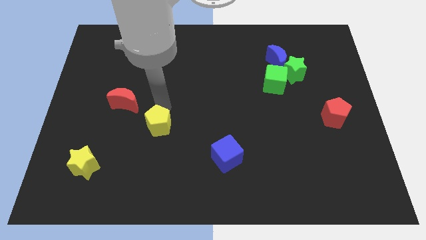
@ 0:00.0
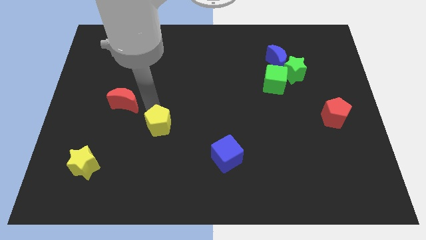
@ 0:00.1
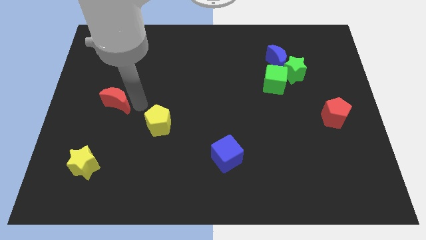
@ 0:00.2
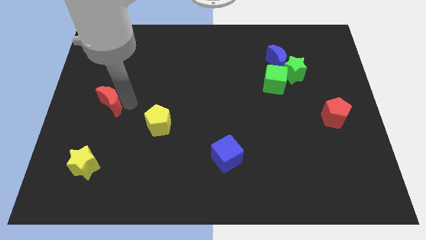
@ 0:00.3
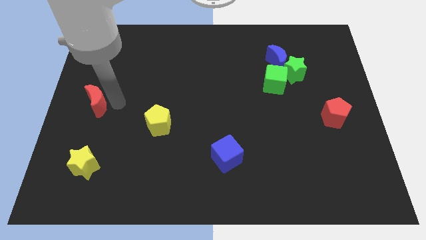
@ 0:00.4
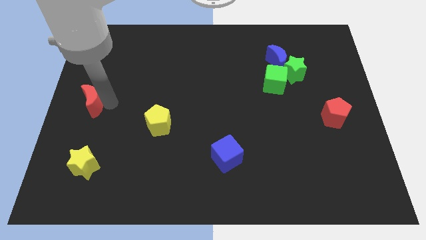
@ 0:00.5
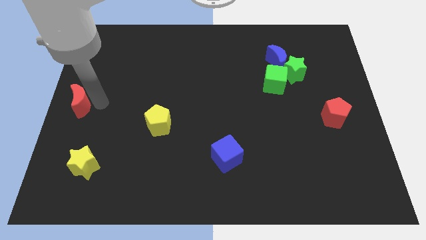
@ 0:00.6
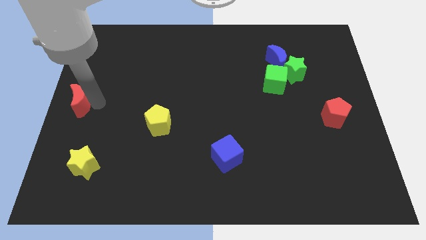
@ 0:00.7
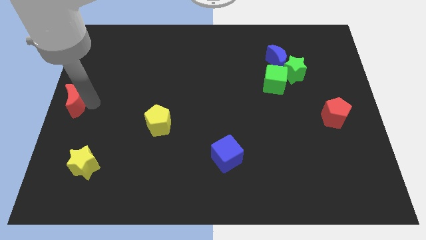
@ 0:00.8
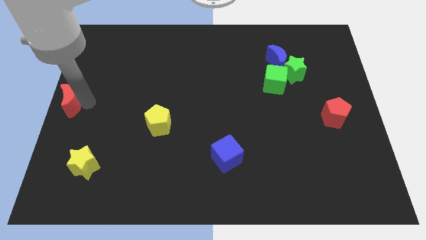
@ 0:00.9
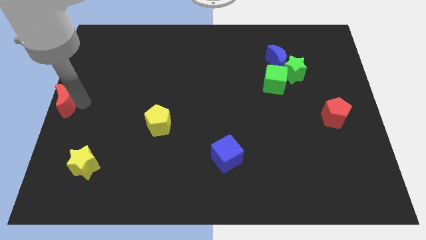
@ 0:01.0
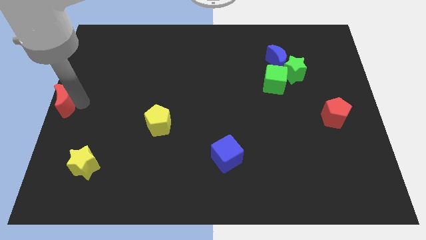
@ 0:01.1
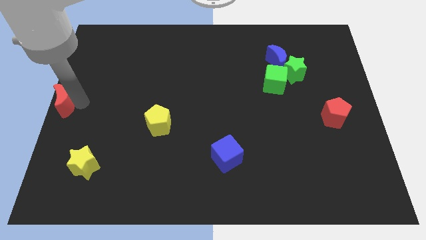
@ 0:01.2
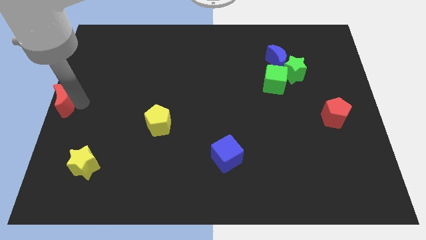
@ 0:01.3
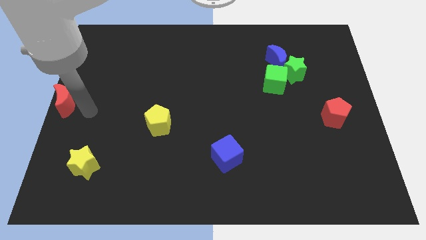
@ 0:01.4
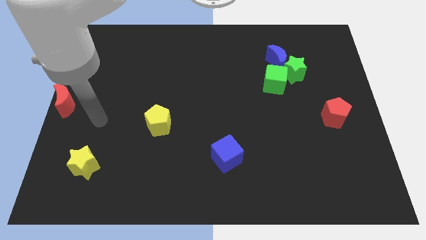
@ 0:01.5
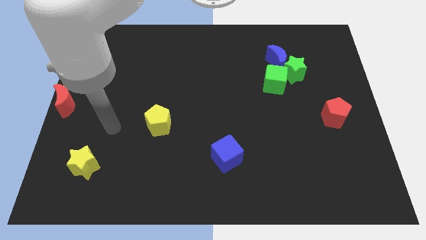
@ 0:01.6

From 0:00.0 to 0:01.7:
place red crescent to the center left of the board

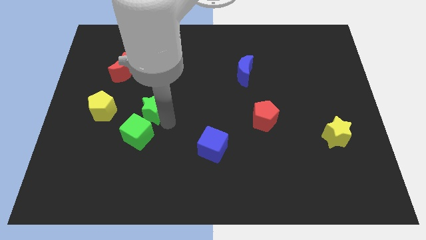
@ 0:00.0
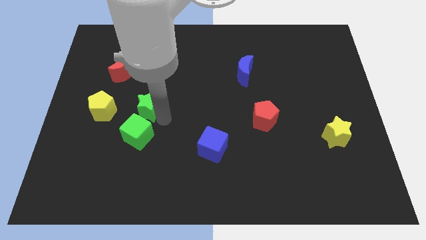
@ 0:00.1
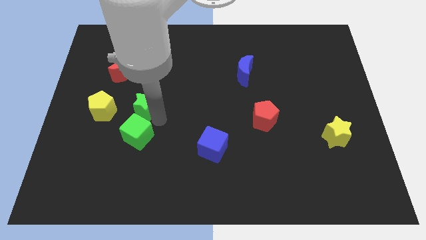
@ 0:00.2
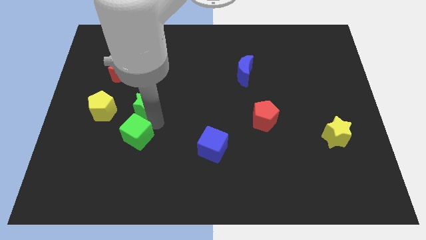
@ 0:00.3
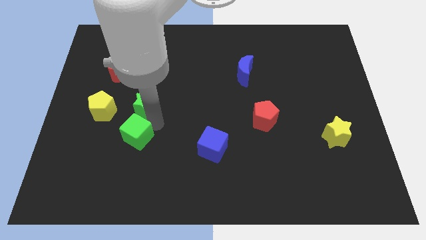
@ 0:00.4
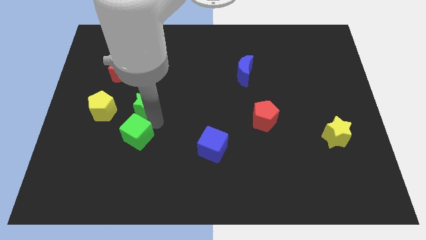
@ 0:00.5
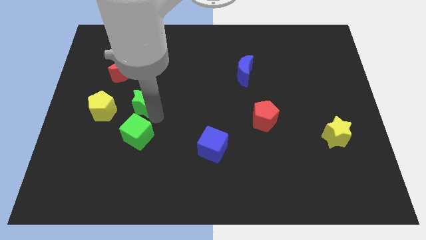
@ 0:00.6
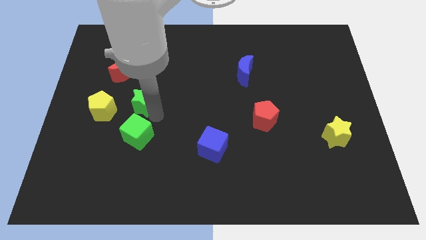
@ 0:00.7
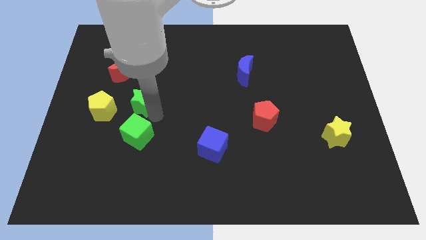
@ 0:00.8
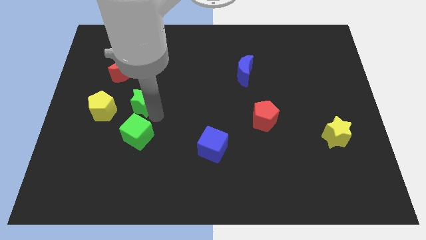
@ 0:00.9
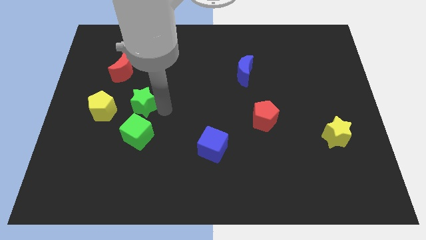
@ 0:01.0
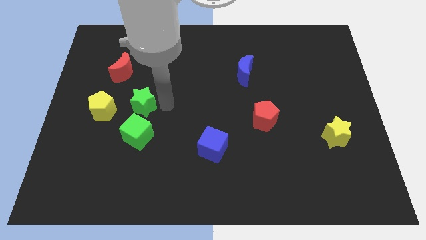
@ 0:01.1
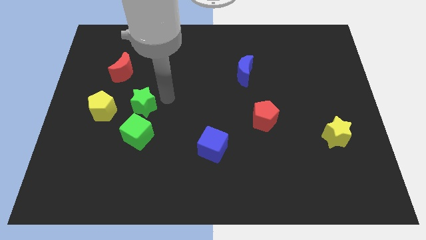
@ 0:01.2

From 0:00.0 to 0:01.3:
put the green star at the bottom right of the red crescent

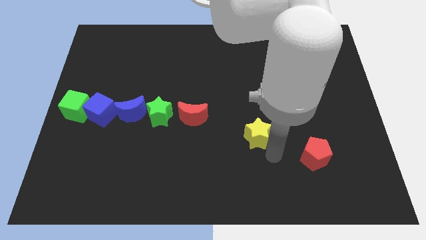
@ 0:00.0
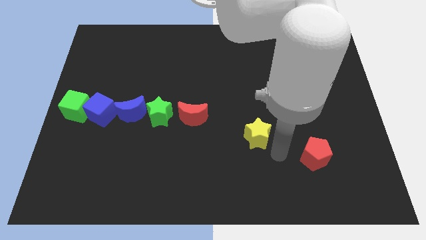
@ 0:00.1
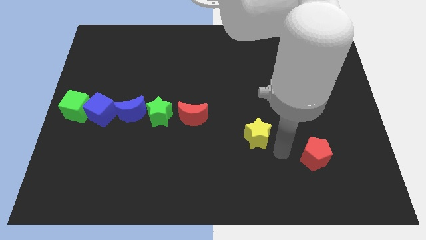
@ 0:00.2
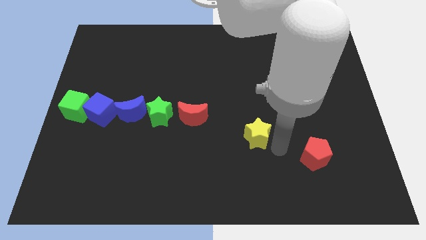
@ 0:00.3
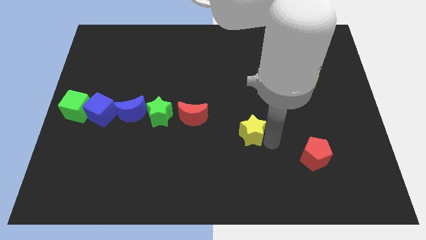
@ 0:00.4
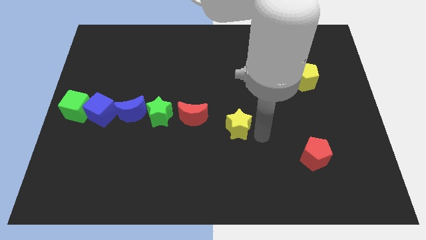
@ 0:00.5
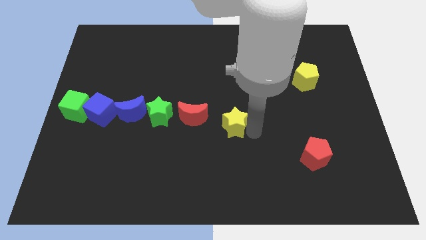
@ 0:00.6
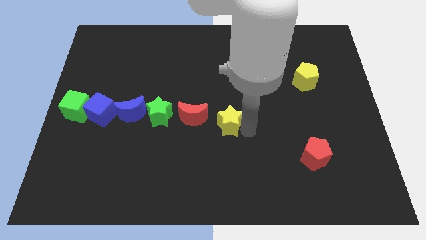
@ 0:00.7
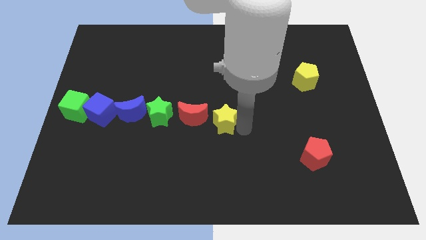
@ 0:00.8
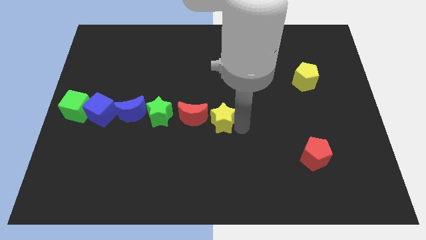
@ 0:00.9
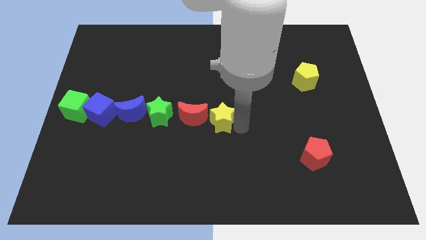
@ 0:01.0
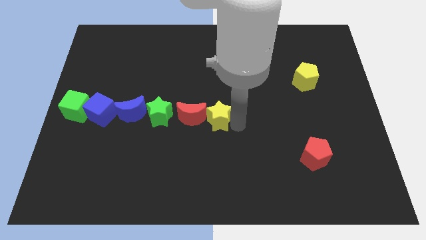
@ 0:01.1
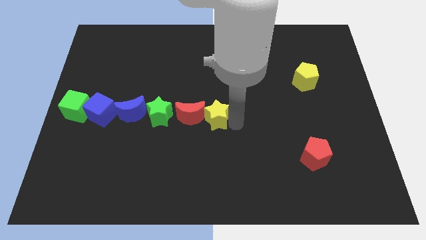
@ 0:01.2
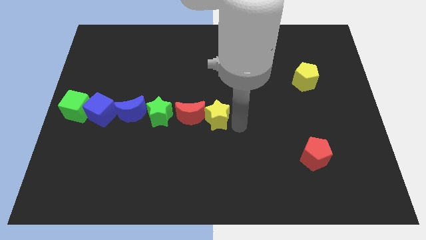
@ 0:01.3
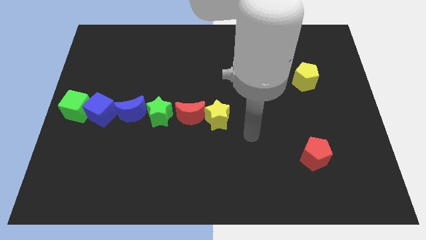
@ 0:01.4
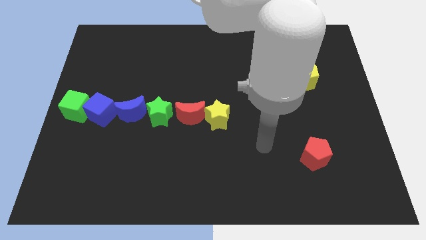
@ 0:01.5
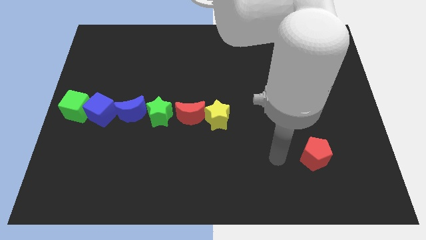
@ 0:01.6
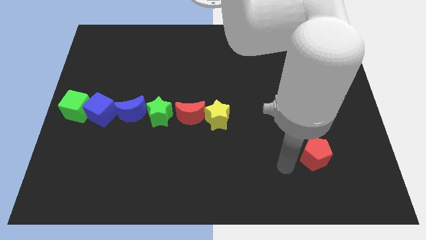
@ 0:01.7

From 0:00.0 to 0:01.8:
push the yellow star to the right side of the red moon

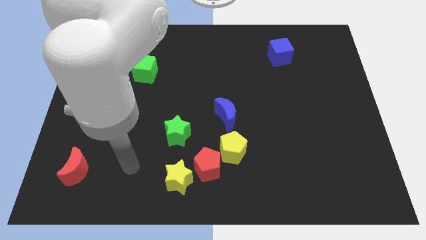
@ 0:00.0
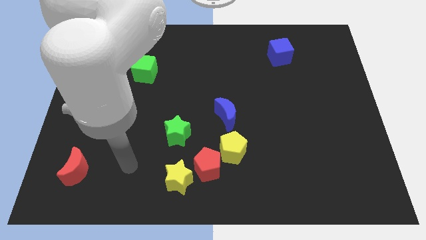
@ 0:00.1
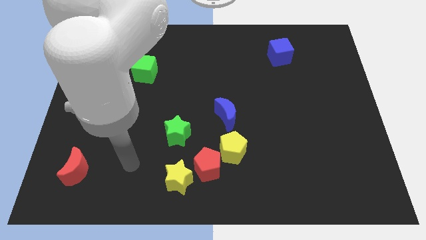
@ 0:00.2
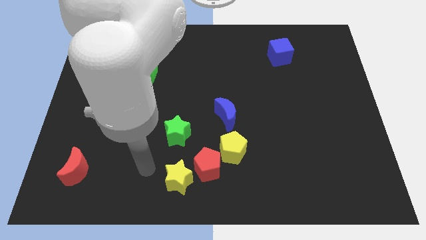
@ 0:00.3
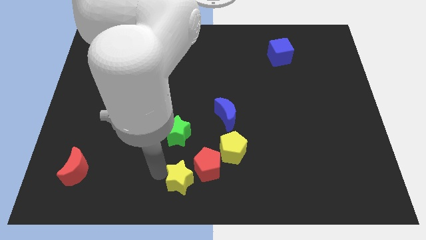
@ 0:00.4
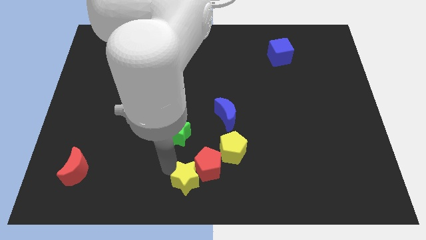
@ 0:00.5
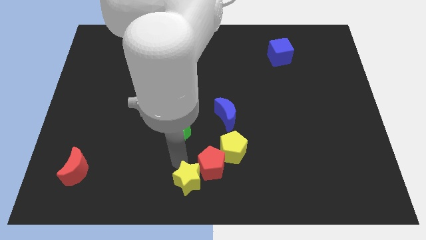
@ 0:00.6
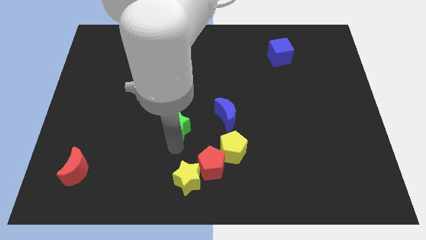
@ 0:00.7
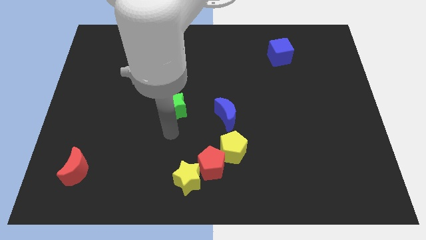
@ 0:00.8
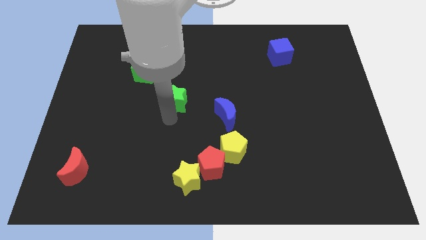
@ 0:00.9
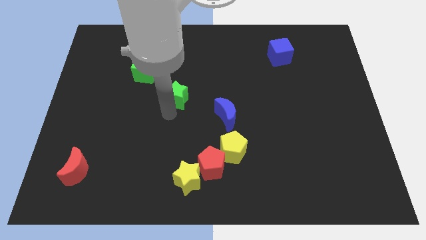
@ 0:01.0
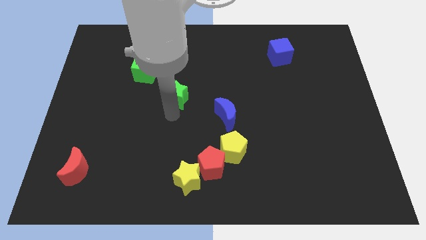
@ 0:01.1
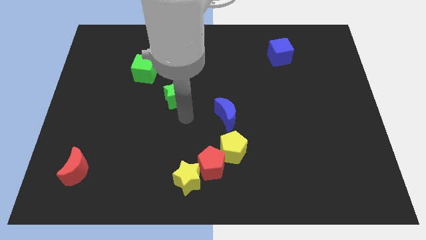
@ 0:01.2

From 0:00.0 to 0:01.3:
slide green star towards top

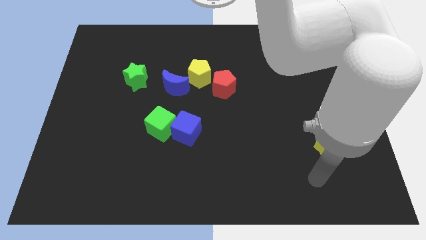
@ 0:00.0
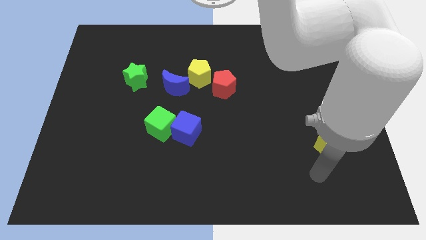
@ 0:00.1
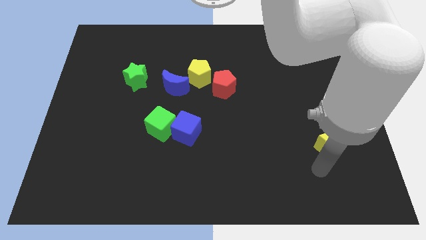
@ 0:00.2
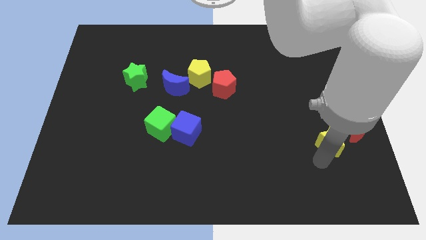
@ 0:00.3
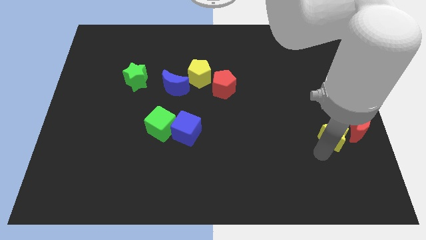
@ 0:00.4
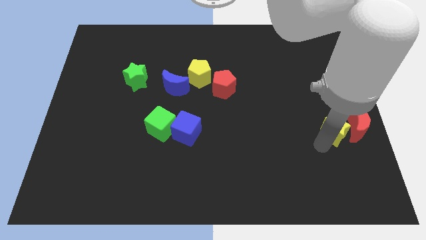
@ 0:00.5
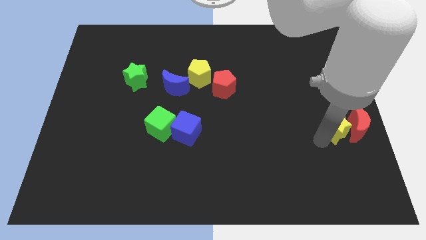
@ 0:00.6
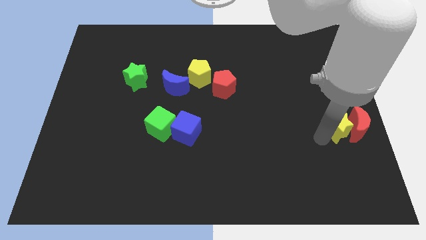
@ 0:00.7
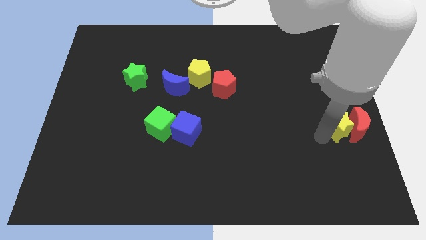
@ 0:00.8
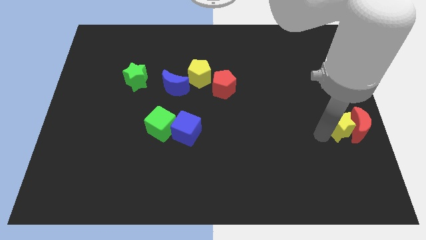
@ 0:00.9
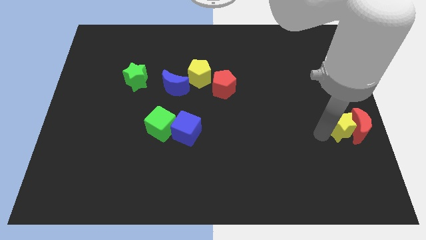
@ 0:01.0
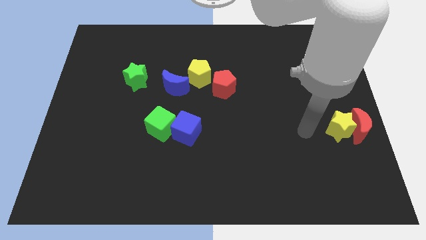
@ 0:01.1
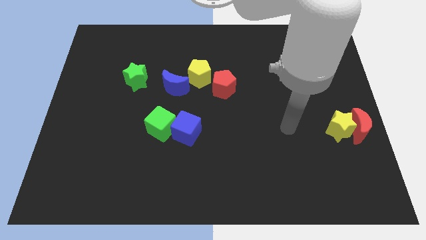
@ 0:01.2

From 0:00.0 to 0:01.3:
move the yellow star to the left of the red crescent

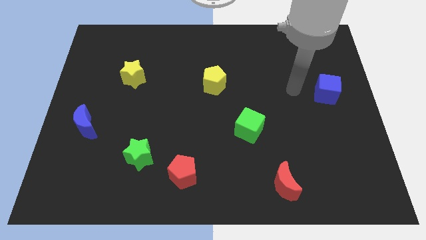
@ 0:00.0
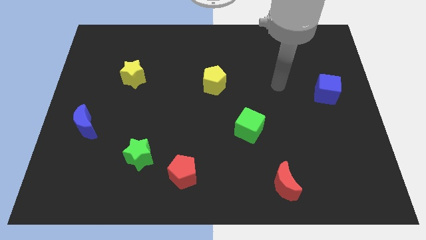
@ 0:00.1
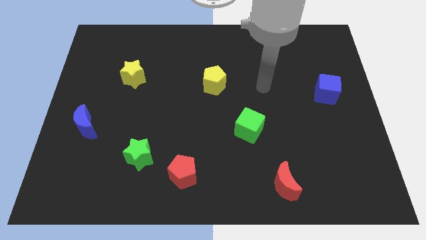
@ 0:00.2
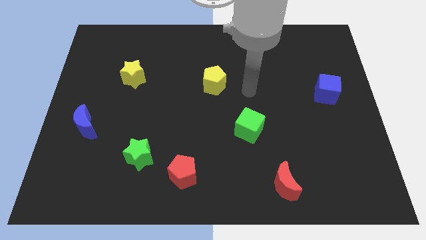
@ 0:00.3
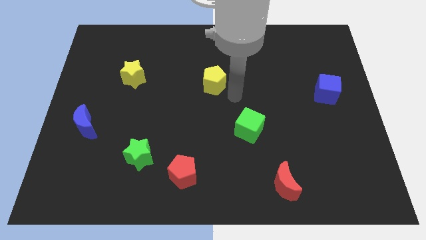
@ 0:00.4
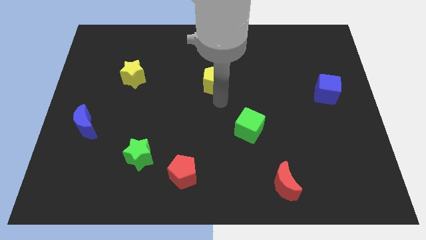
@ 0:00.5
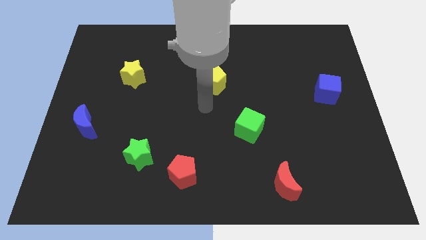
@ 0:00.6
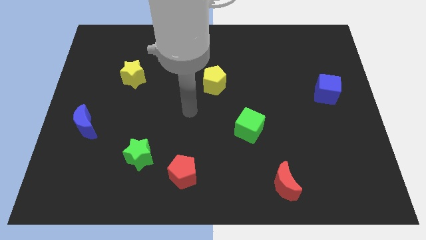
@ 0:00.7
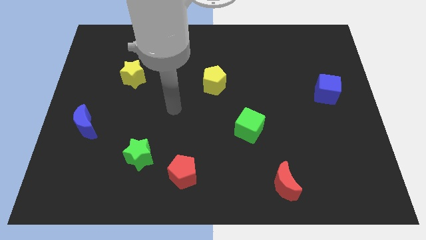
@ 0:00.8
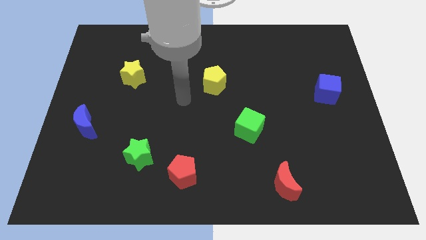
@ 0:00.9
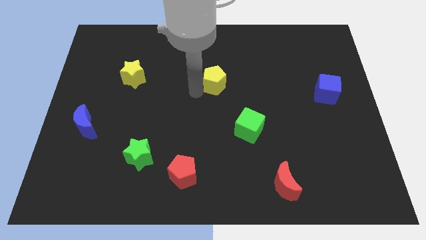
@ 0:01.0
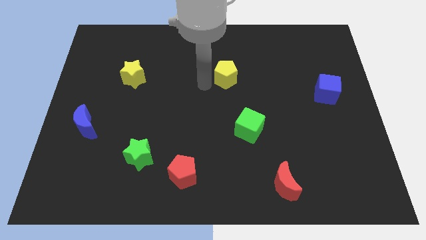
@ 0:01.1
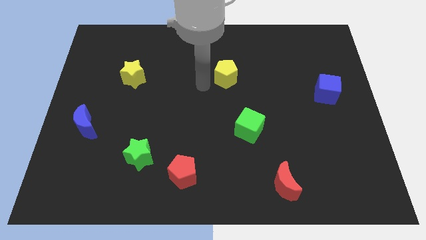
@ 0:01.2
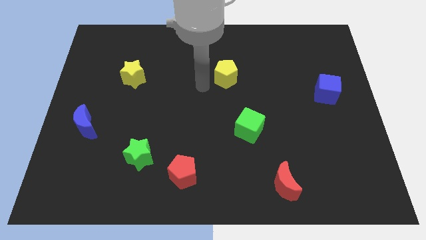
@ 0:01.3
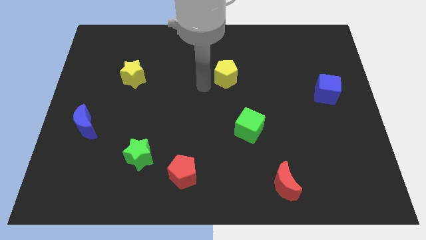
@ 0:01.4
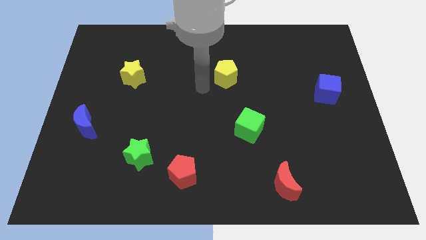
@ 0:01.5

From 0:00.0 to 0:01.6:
push the yellow pentagon slightly to the top right side of the board
